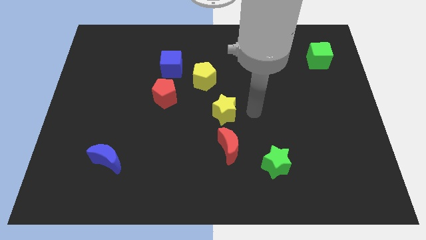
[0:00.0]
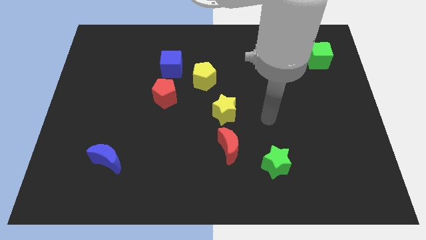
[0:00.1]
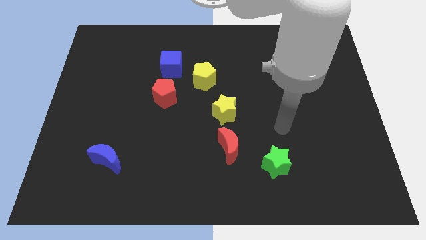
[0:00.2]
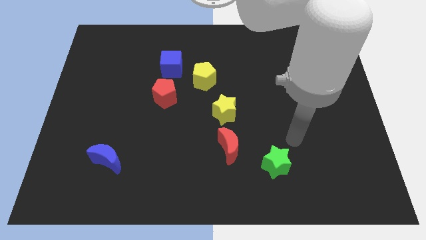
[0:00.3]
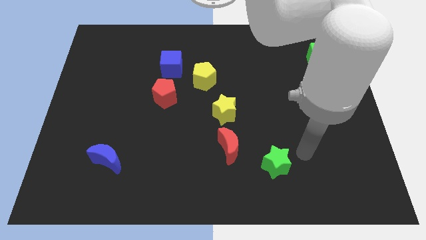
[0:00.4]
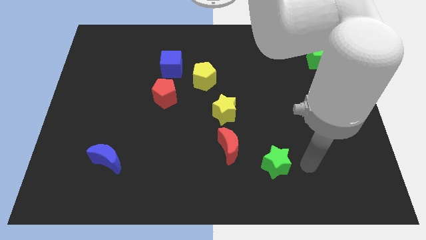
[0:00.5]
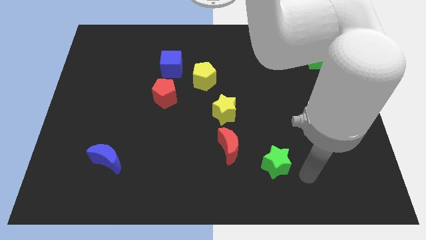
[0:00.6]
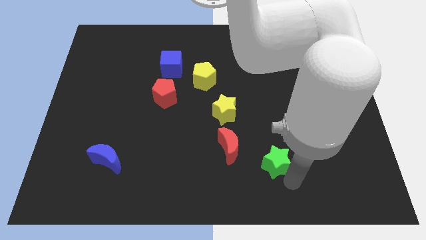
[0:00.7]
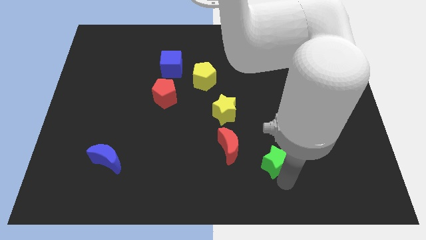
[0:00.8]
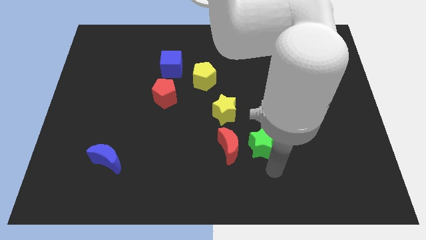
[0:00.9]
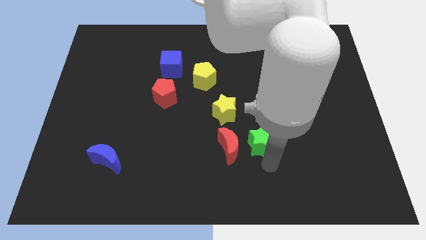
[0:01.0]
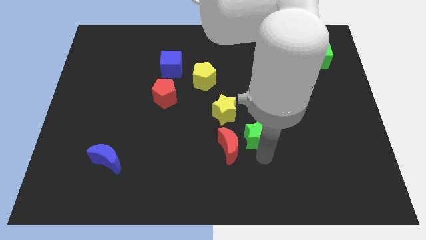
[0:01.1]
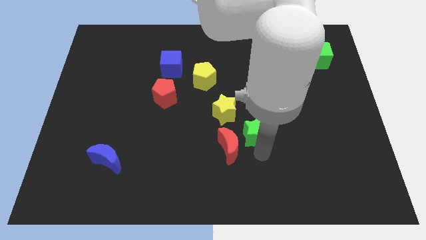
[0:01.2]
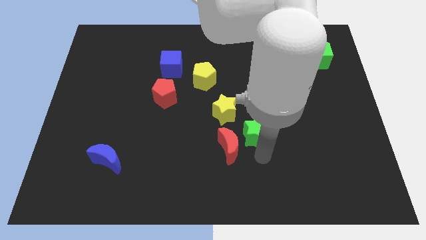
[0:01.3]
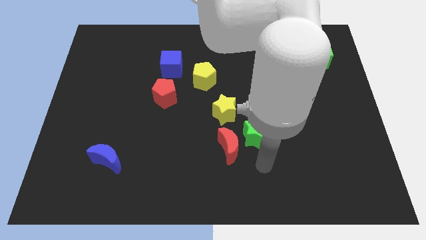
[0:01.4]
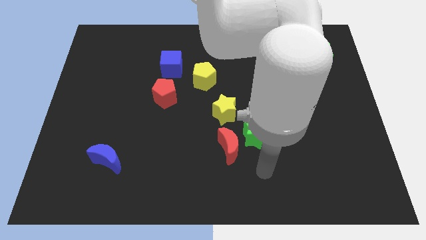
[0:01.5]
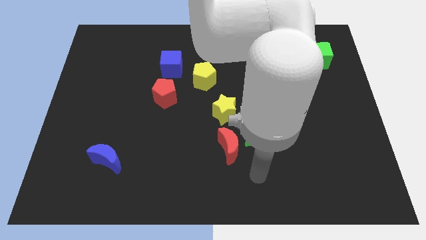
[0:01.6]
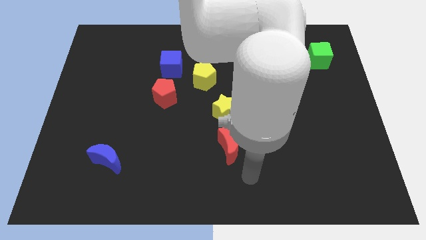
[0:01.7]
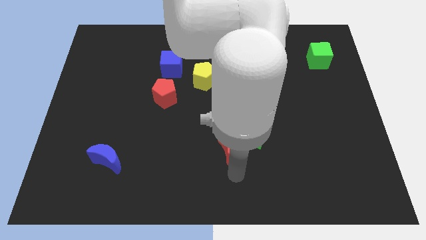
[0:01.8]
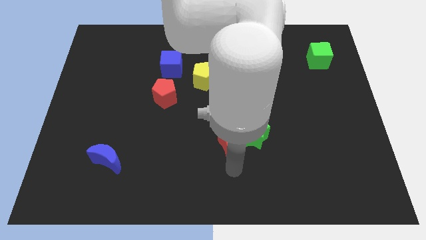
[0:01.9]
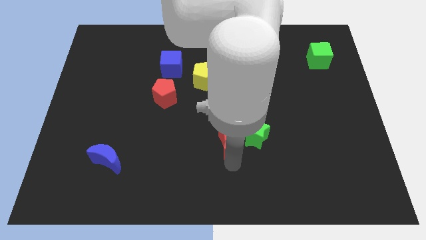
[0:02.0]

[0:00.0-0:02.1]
place green star adjacent to the red crescent

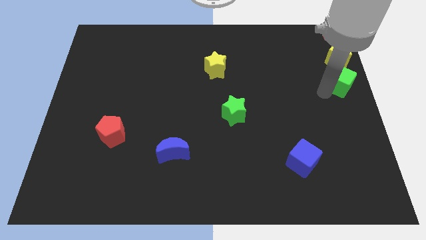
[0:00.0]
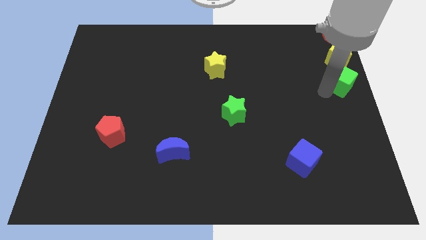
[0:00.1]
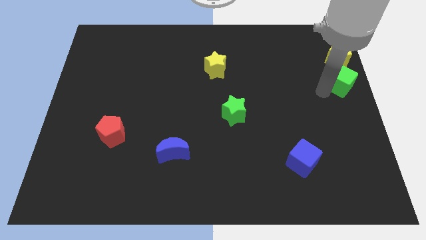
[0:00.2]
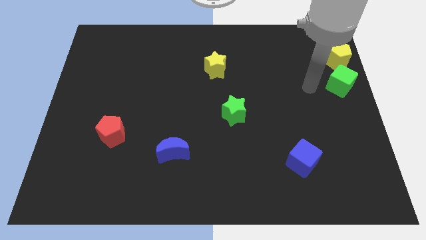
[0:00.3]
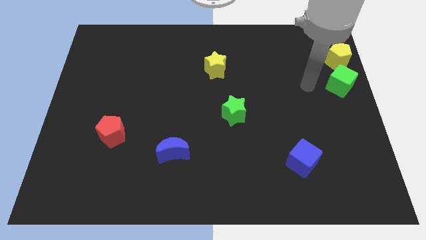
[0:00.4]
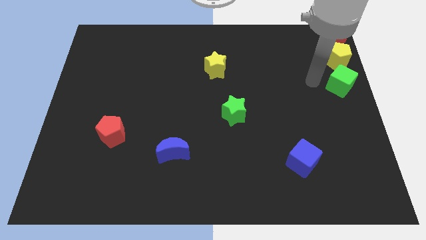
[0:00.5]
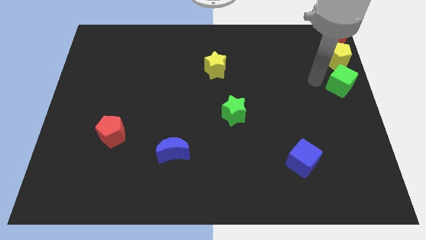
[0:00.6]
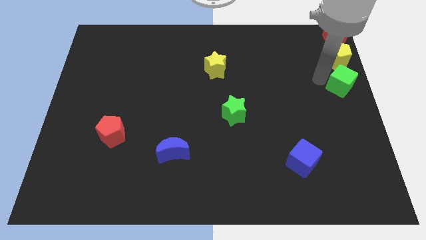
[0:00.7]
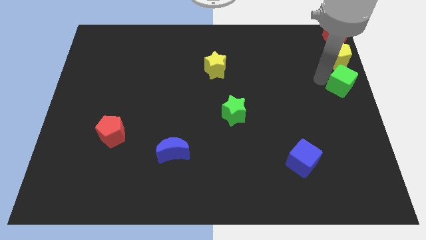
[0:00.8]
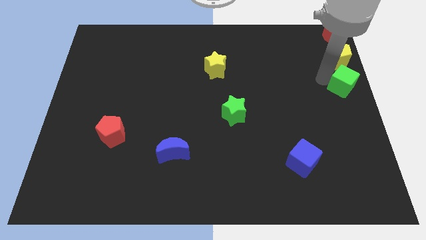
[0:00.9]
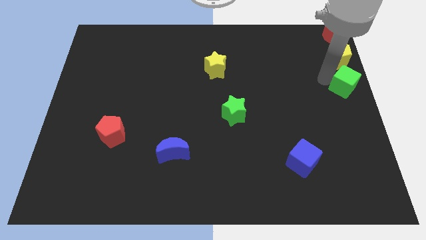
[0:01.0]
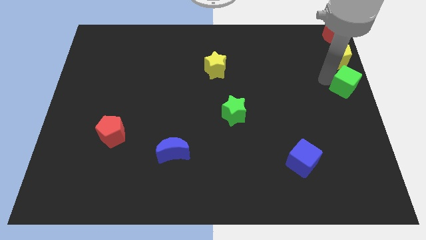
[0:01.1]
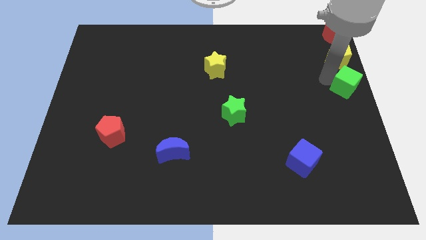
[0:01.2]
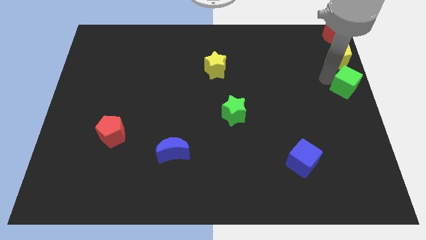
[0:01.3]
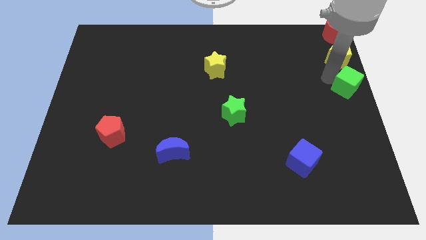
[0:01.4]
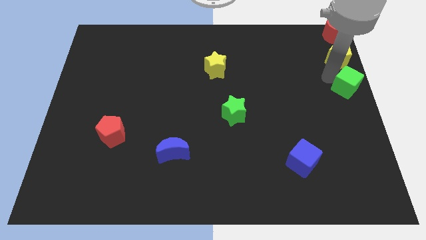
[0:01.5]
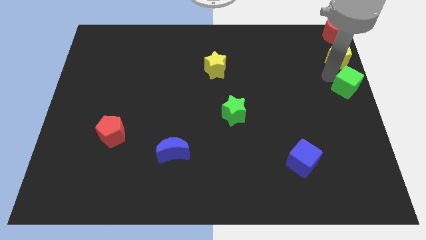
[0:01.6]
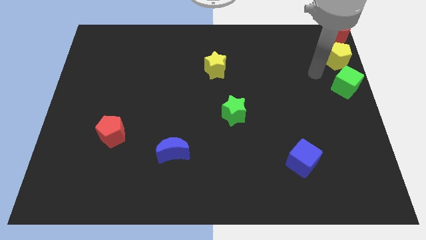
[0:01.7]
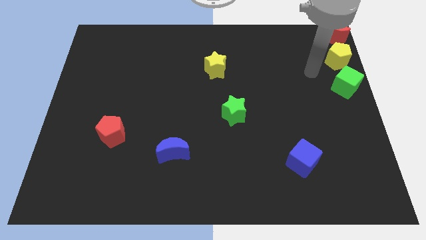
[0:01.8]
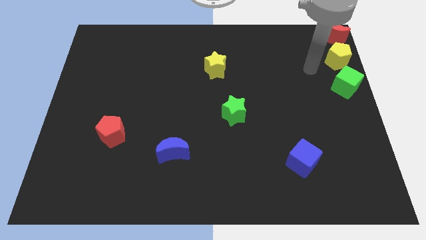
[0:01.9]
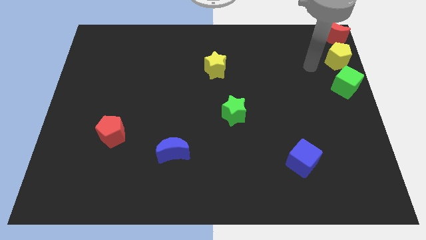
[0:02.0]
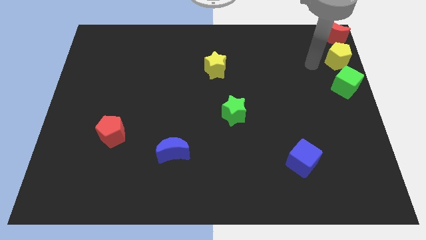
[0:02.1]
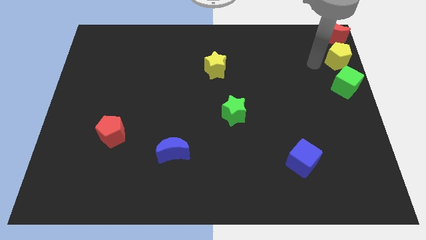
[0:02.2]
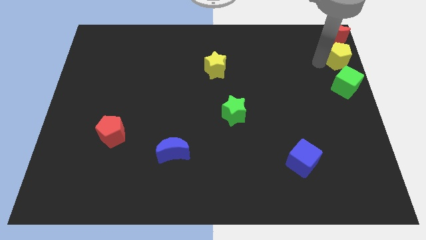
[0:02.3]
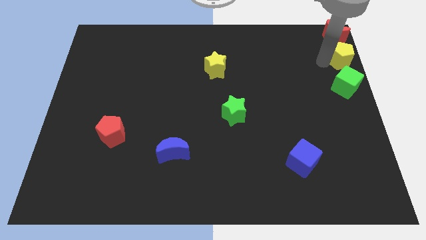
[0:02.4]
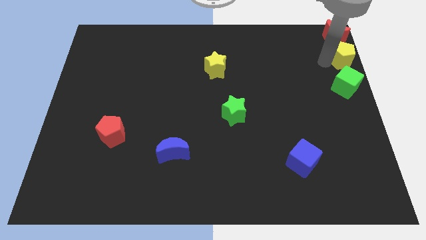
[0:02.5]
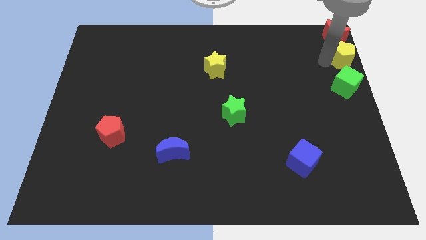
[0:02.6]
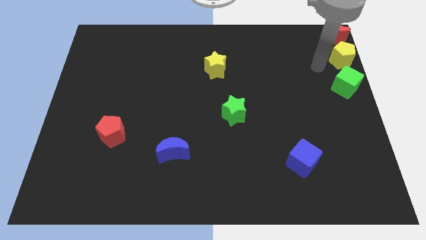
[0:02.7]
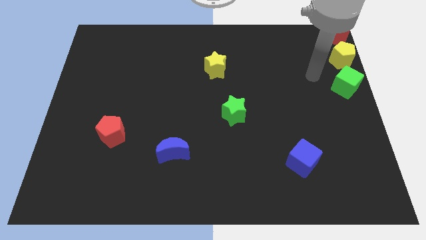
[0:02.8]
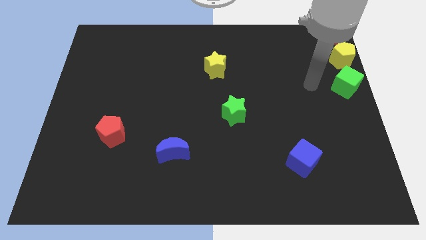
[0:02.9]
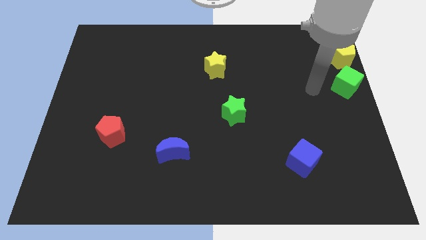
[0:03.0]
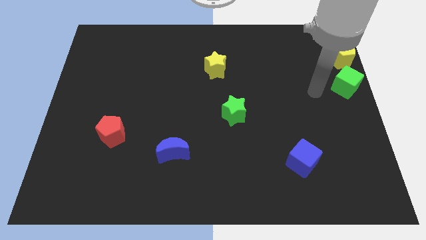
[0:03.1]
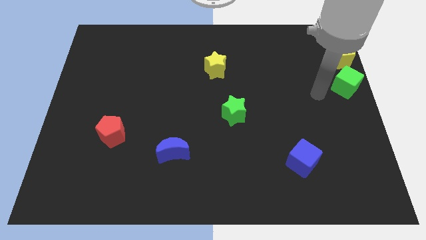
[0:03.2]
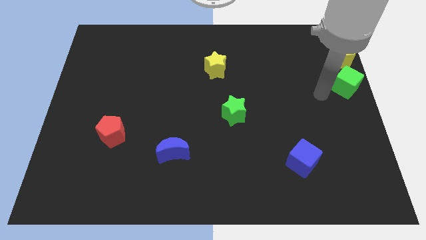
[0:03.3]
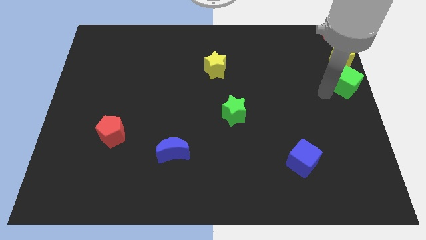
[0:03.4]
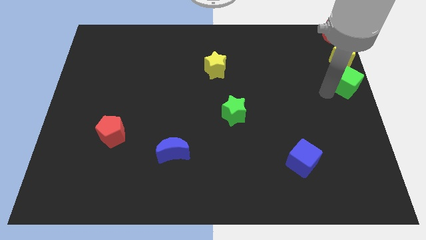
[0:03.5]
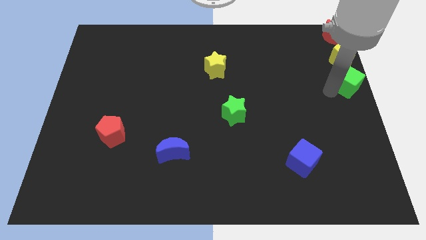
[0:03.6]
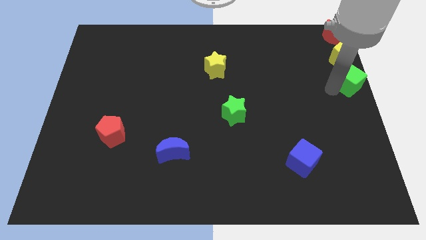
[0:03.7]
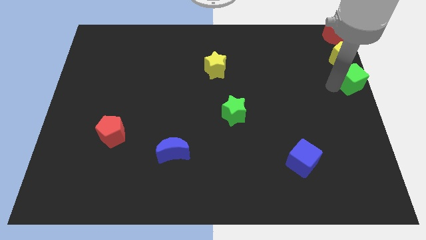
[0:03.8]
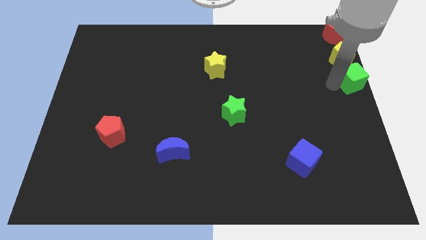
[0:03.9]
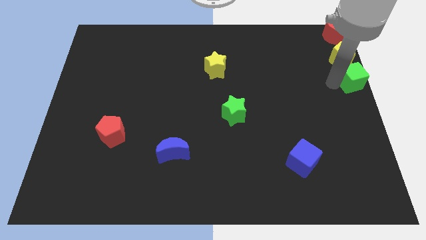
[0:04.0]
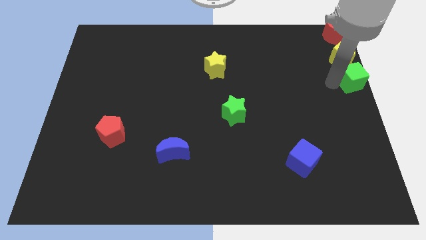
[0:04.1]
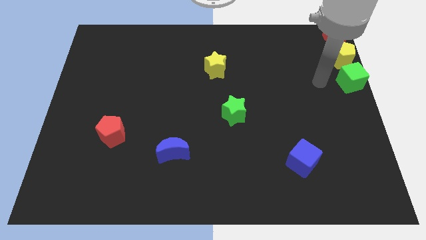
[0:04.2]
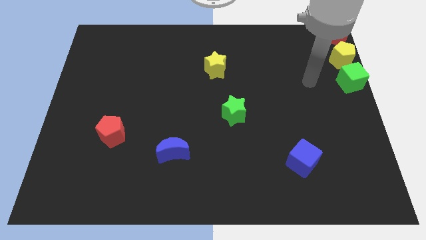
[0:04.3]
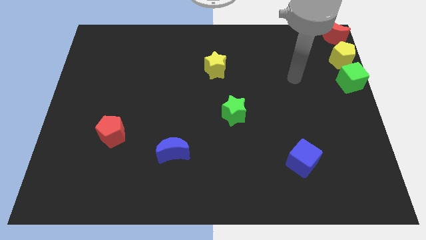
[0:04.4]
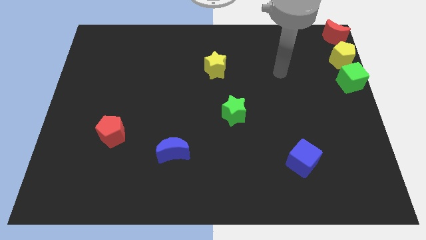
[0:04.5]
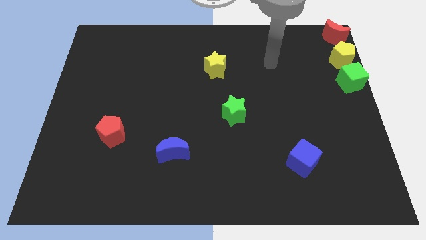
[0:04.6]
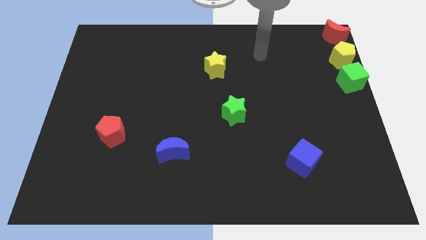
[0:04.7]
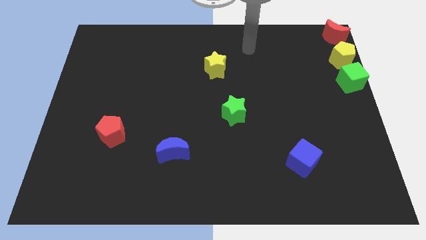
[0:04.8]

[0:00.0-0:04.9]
adjust the yellow pentagon and green cube to the top left side of the board

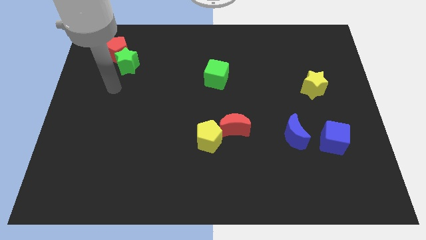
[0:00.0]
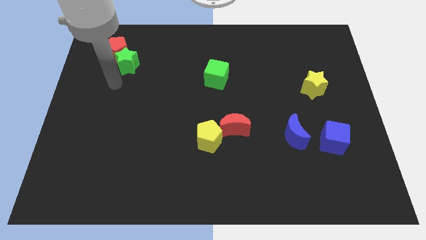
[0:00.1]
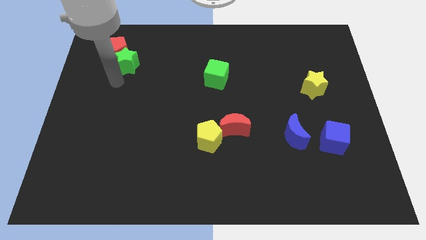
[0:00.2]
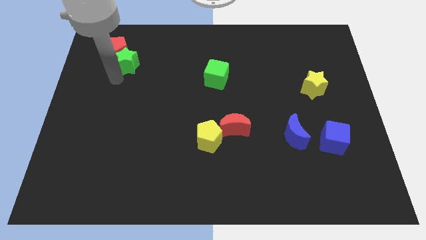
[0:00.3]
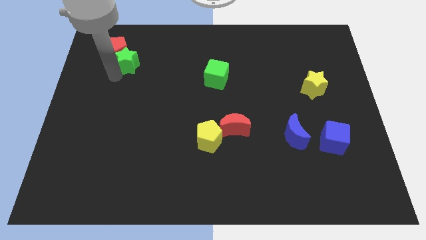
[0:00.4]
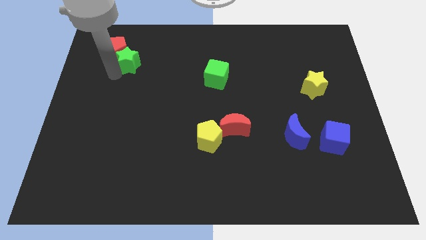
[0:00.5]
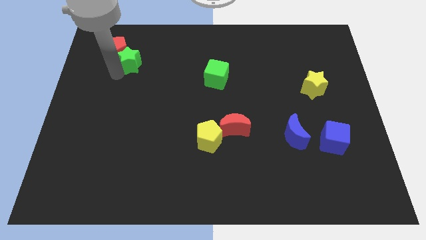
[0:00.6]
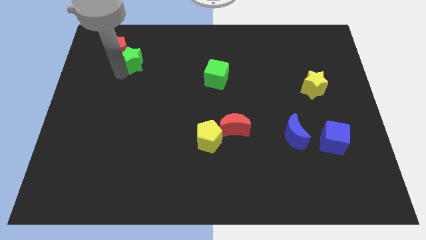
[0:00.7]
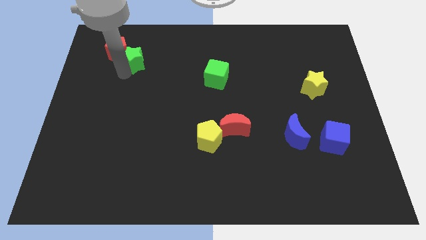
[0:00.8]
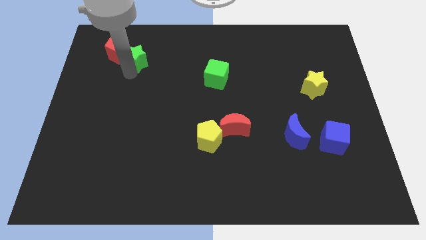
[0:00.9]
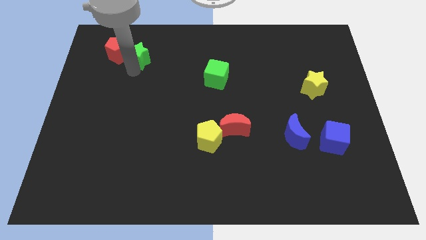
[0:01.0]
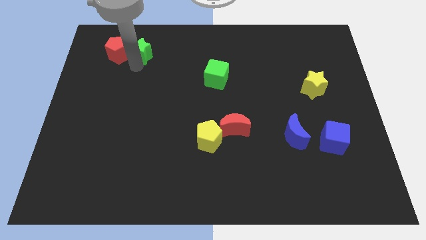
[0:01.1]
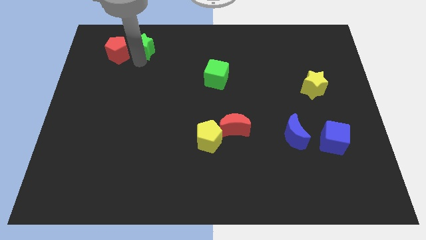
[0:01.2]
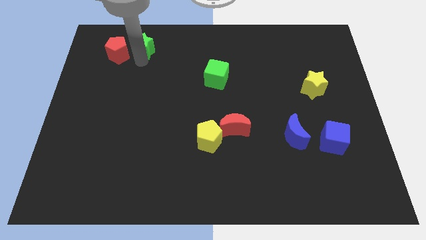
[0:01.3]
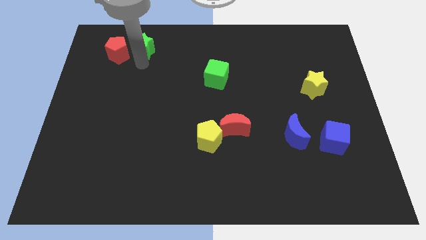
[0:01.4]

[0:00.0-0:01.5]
place the green star left to the green cube

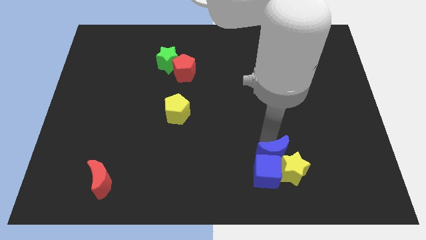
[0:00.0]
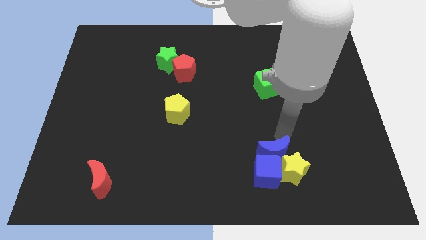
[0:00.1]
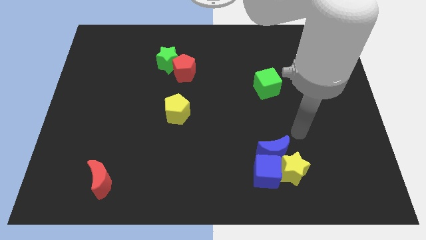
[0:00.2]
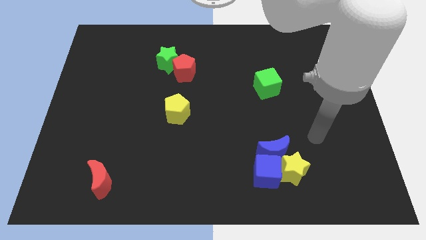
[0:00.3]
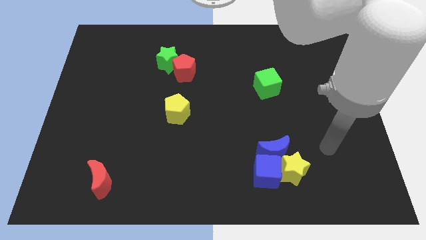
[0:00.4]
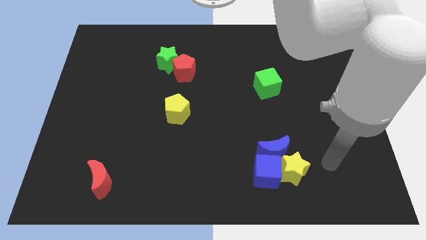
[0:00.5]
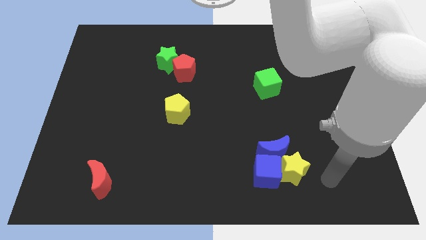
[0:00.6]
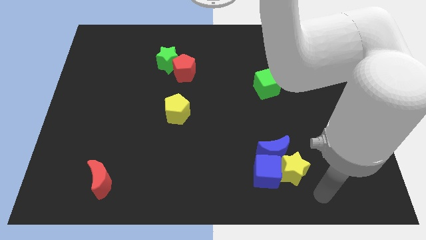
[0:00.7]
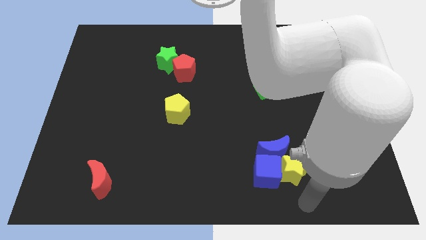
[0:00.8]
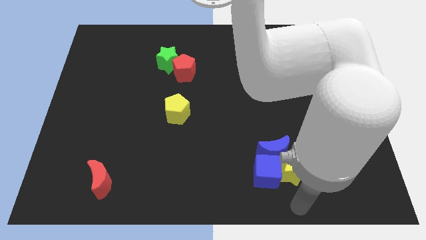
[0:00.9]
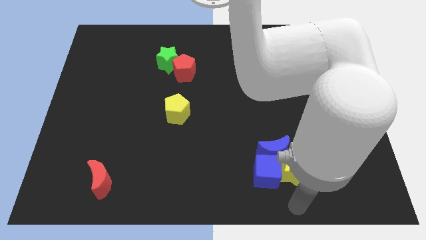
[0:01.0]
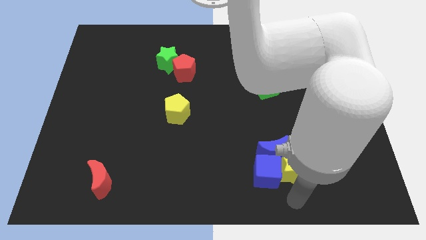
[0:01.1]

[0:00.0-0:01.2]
move your arm away from the blue moon
